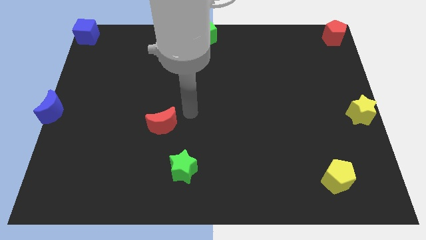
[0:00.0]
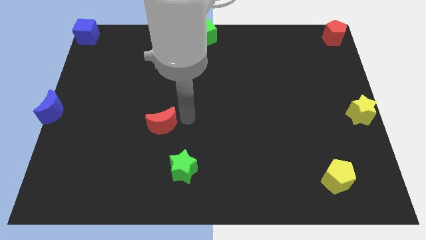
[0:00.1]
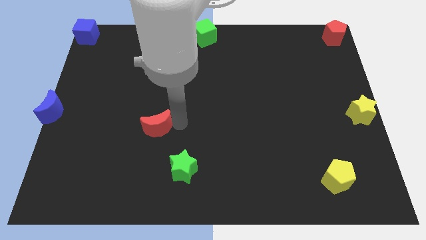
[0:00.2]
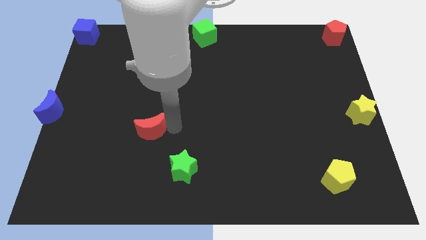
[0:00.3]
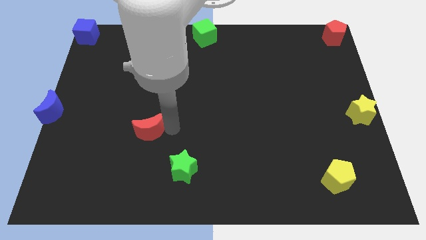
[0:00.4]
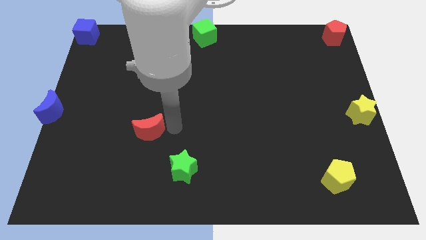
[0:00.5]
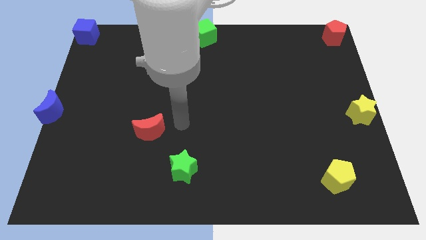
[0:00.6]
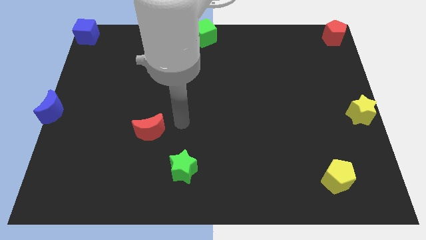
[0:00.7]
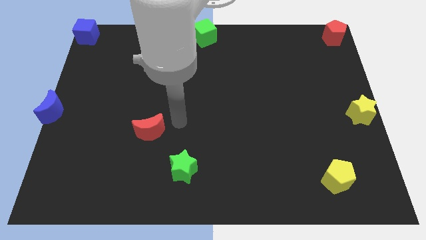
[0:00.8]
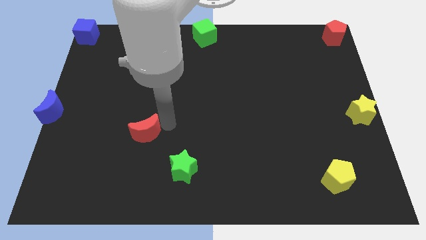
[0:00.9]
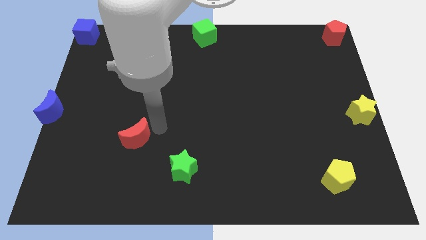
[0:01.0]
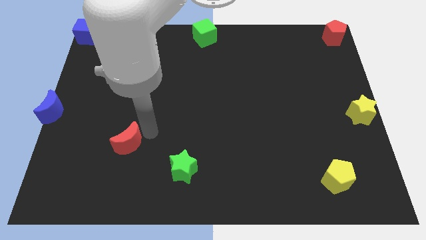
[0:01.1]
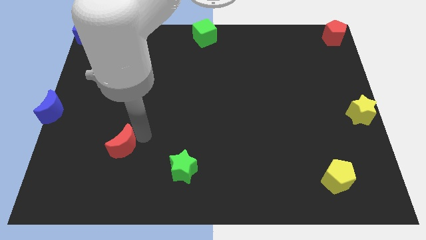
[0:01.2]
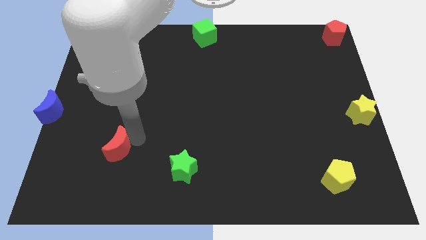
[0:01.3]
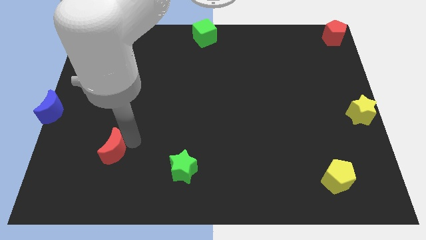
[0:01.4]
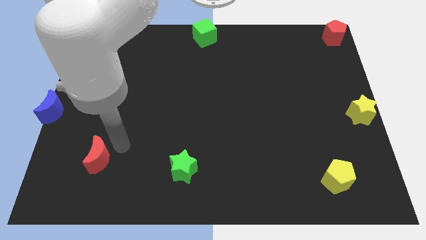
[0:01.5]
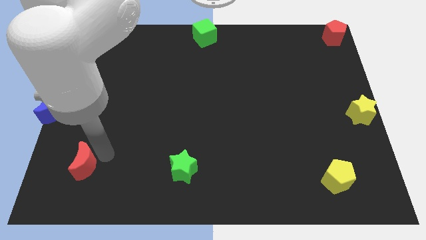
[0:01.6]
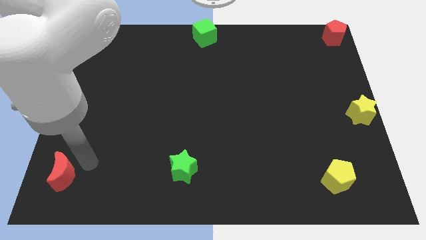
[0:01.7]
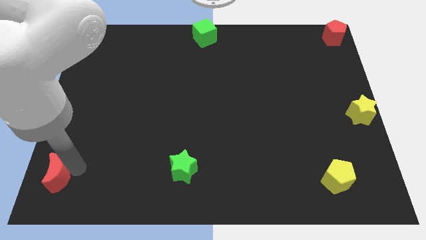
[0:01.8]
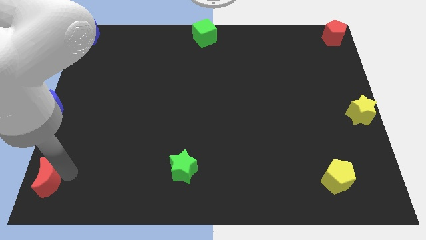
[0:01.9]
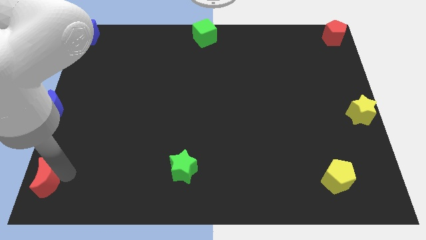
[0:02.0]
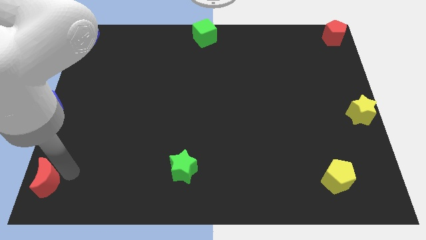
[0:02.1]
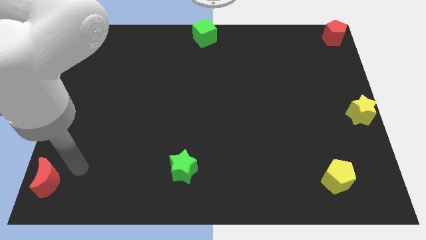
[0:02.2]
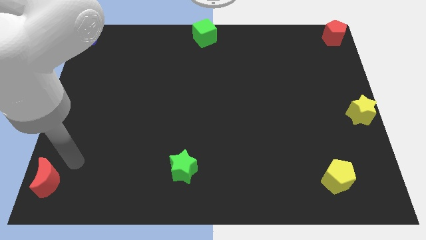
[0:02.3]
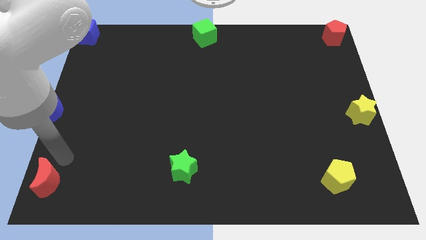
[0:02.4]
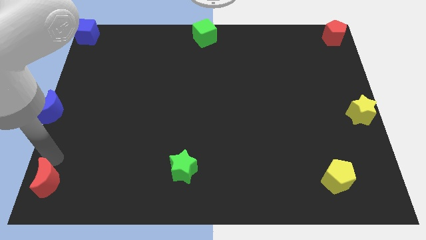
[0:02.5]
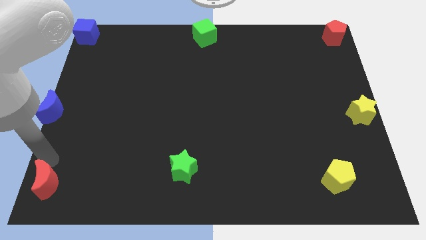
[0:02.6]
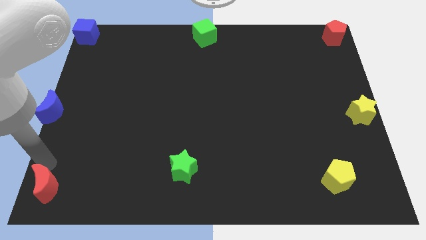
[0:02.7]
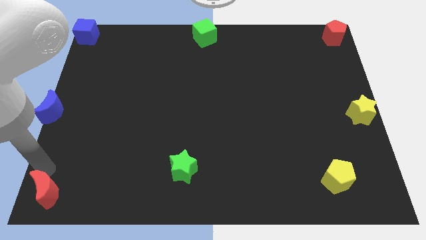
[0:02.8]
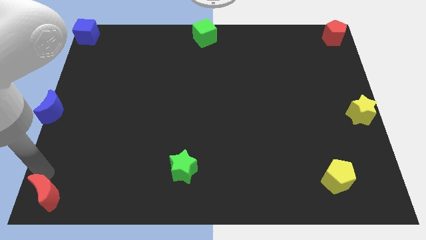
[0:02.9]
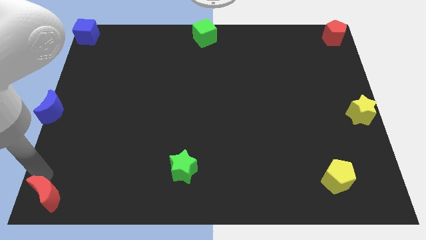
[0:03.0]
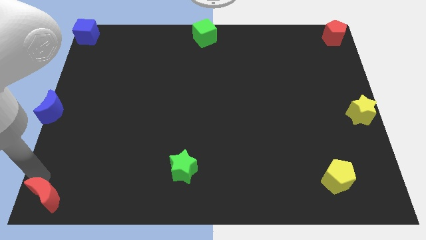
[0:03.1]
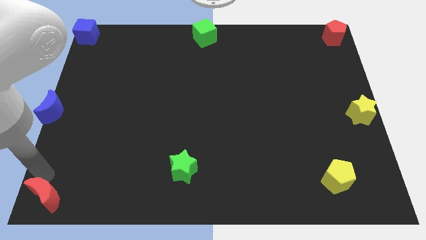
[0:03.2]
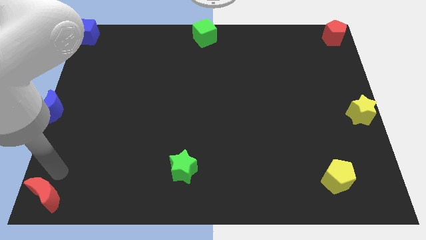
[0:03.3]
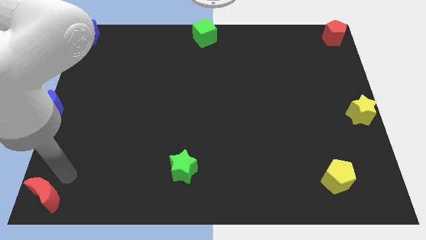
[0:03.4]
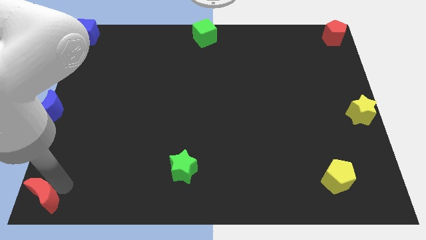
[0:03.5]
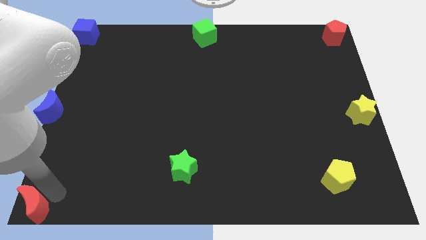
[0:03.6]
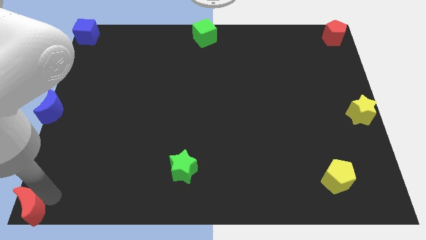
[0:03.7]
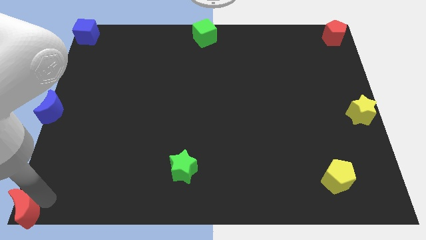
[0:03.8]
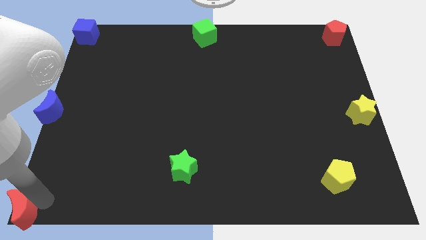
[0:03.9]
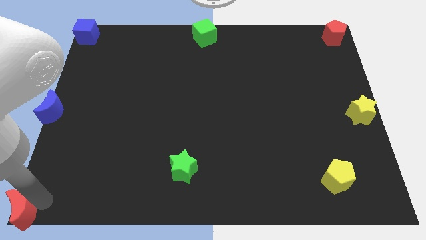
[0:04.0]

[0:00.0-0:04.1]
push red moon in the bottom left corner

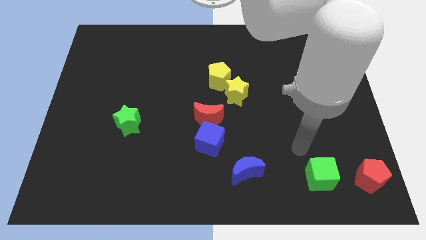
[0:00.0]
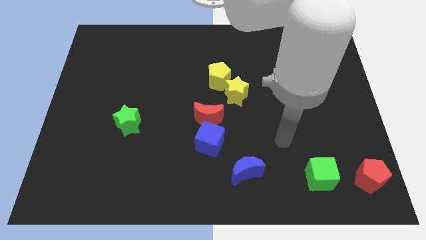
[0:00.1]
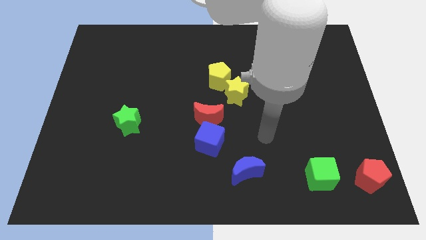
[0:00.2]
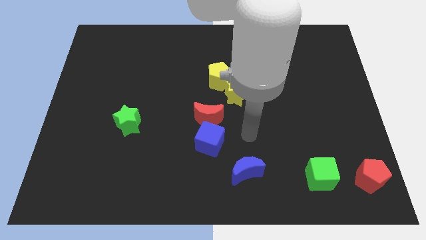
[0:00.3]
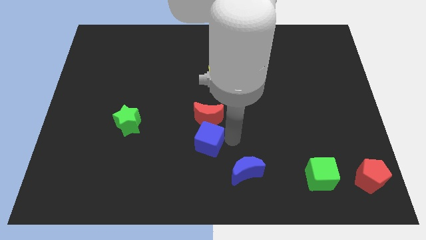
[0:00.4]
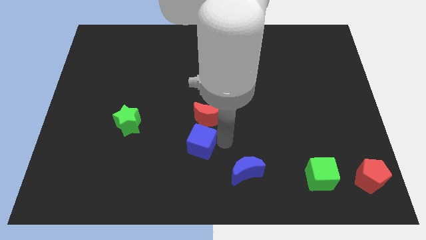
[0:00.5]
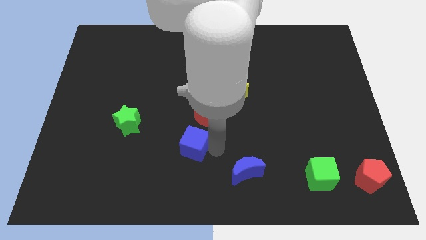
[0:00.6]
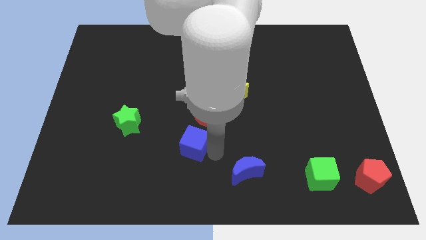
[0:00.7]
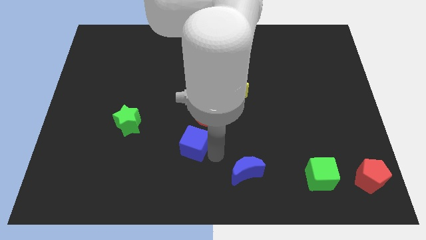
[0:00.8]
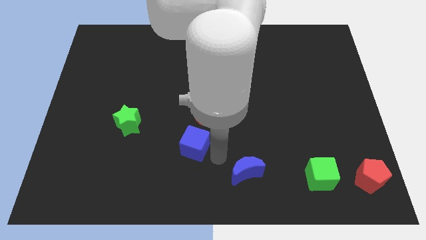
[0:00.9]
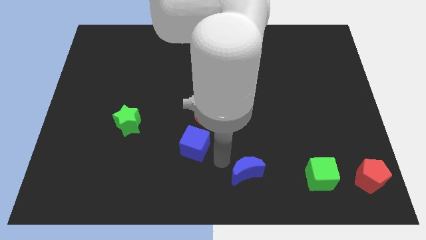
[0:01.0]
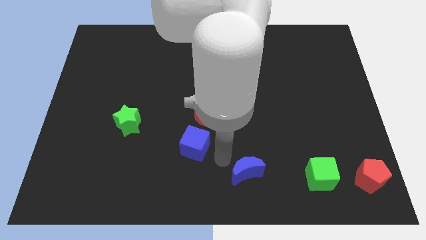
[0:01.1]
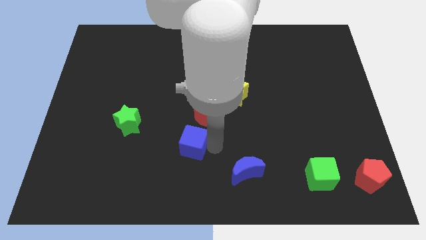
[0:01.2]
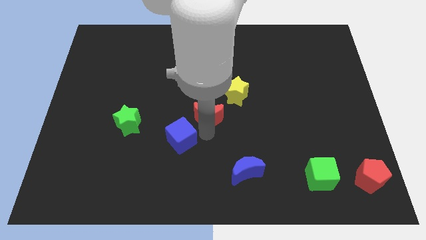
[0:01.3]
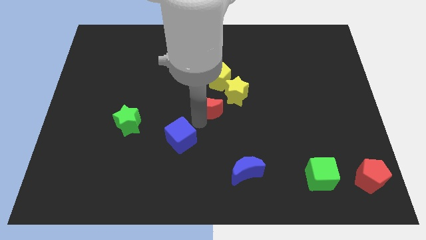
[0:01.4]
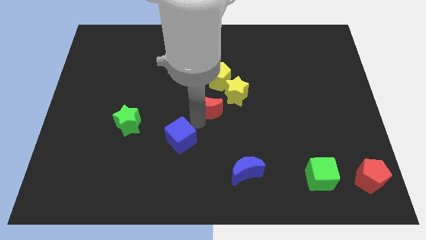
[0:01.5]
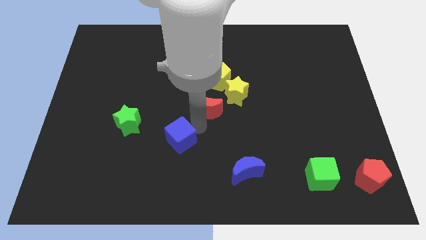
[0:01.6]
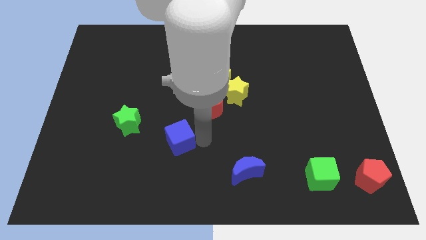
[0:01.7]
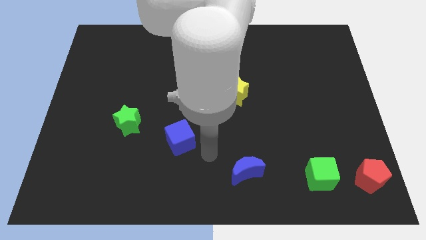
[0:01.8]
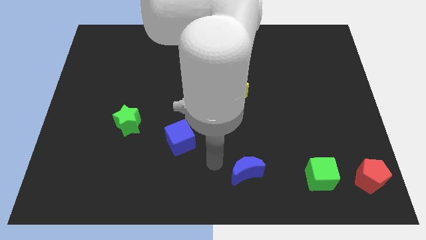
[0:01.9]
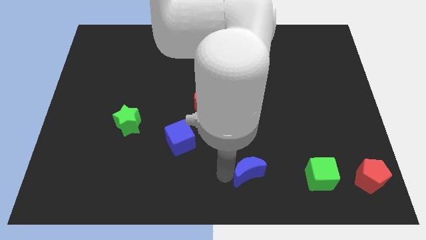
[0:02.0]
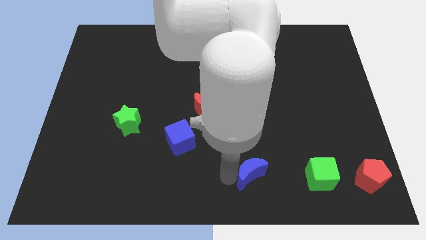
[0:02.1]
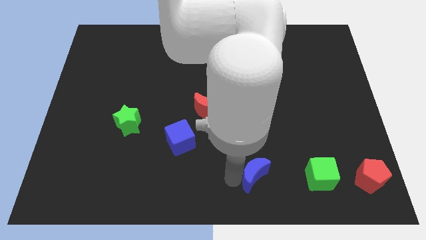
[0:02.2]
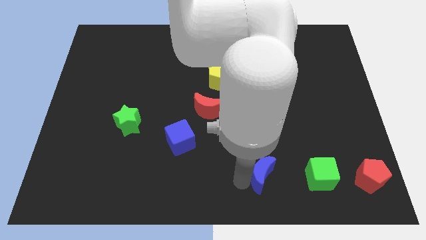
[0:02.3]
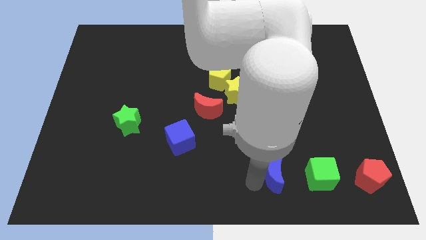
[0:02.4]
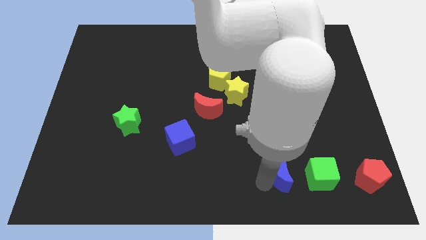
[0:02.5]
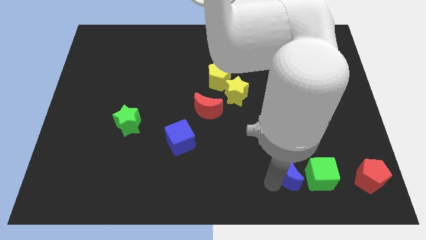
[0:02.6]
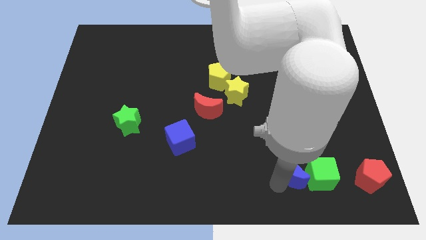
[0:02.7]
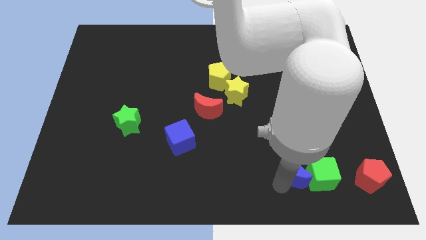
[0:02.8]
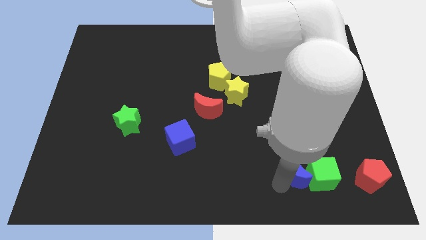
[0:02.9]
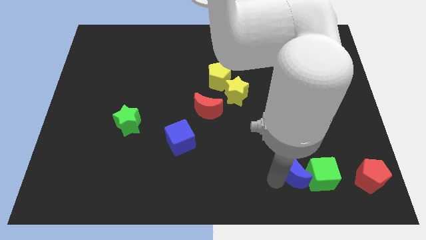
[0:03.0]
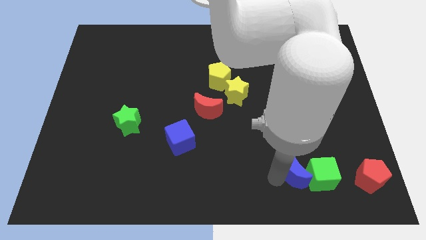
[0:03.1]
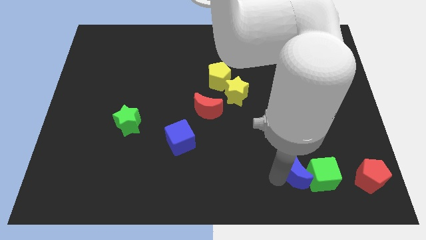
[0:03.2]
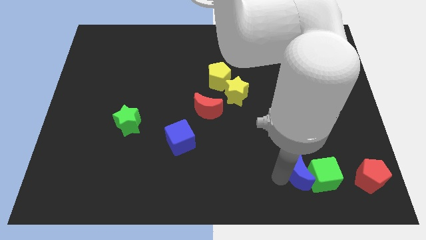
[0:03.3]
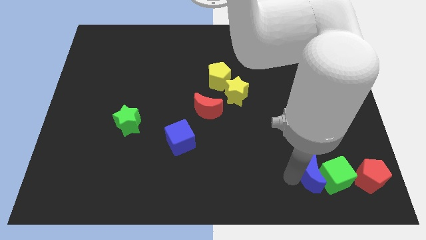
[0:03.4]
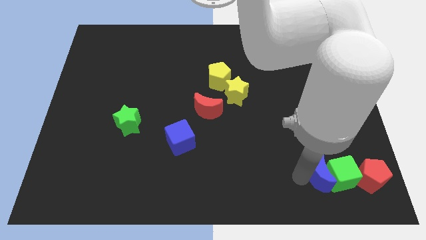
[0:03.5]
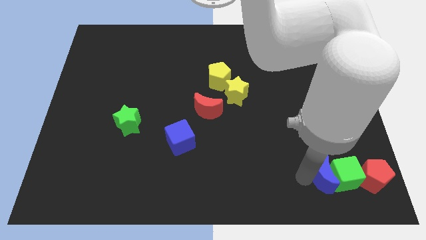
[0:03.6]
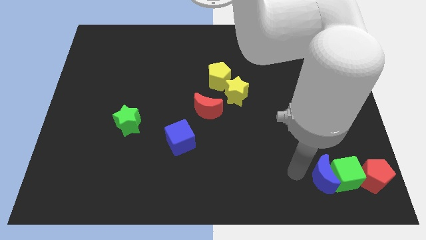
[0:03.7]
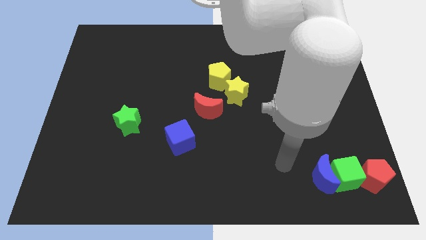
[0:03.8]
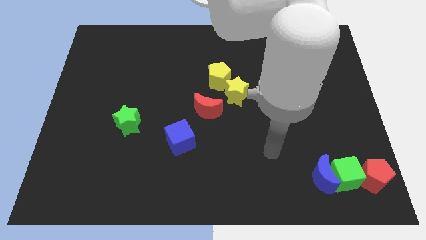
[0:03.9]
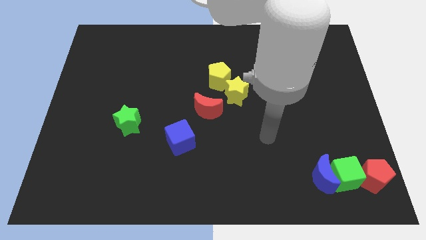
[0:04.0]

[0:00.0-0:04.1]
slide blue moon into green cube

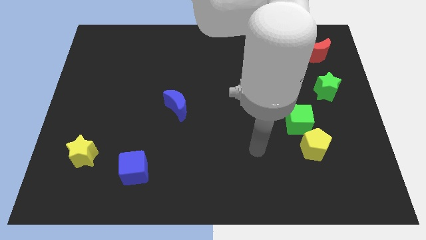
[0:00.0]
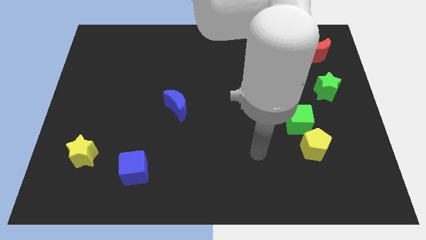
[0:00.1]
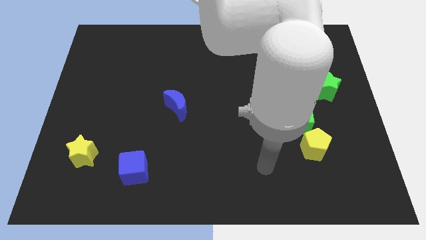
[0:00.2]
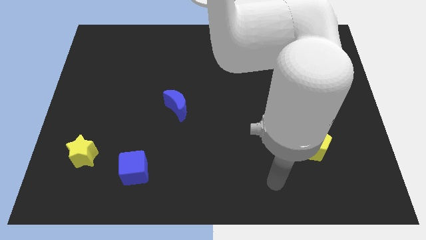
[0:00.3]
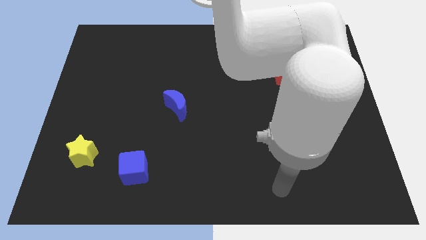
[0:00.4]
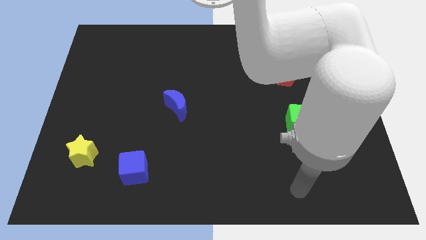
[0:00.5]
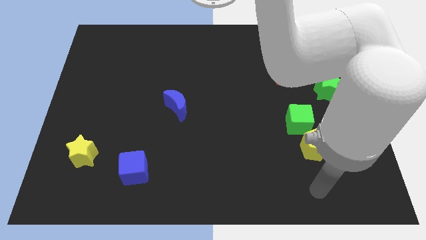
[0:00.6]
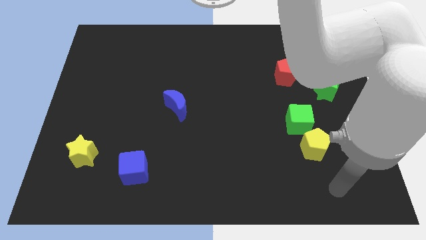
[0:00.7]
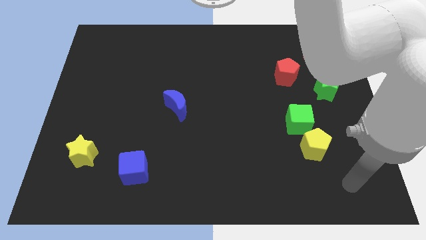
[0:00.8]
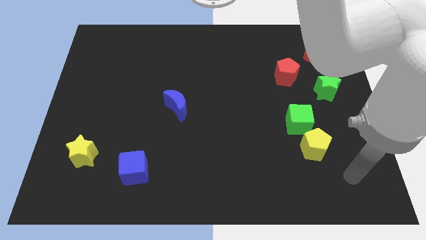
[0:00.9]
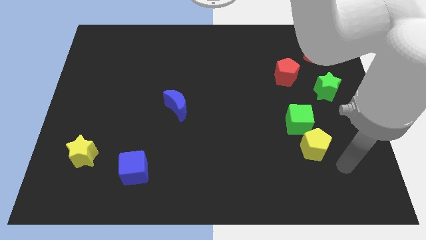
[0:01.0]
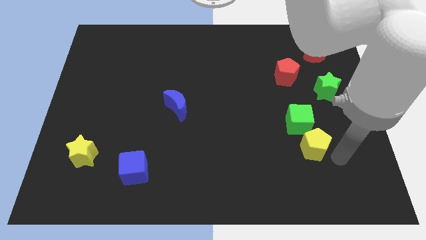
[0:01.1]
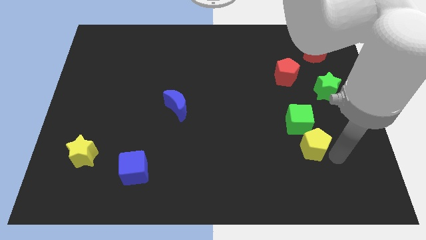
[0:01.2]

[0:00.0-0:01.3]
point your arm to the right side of yellow pentagon
